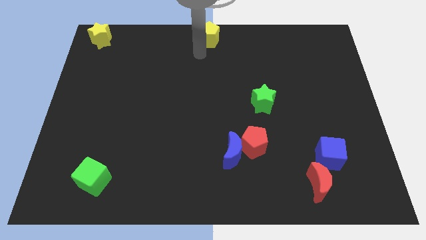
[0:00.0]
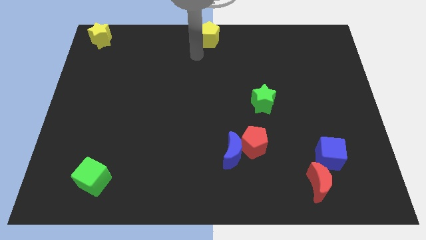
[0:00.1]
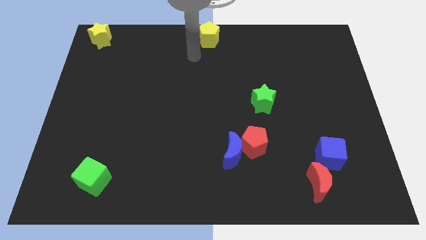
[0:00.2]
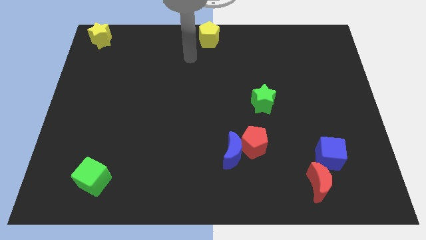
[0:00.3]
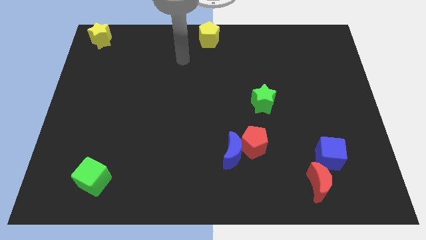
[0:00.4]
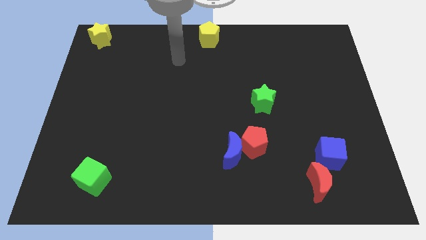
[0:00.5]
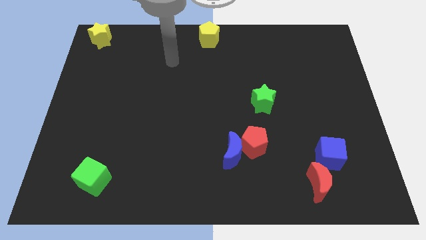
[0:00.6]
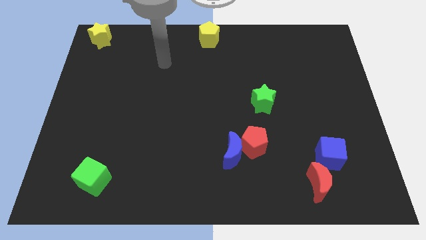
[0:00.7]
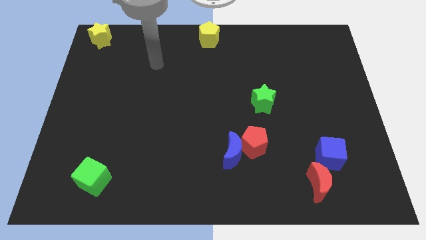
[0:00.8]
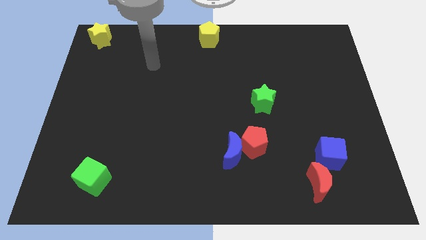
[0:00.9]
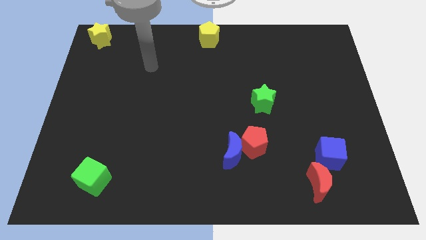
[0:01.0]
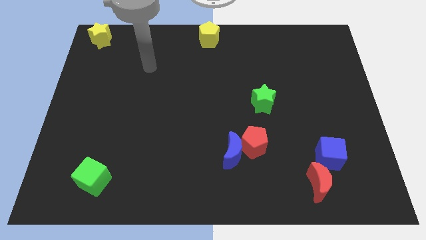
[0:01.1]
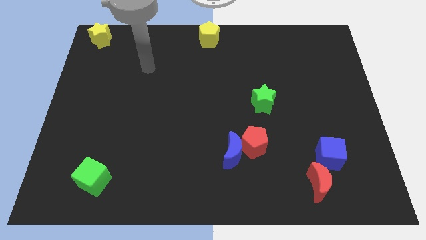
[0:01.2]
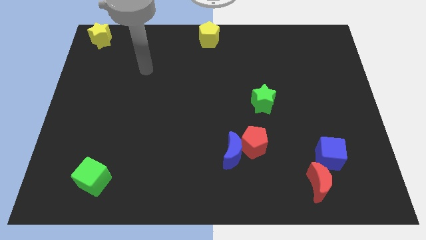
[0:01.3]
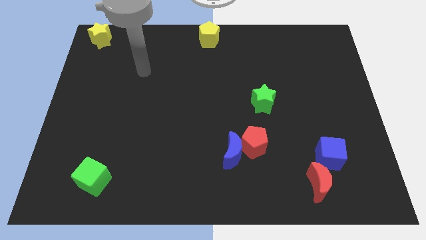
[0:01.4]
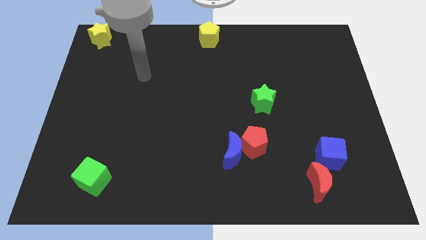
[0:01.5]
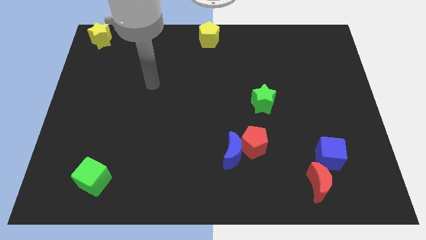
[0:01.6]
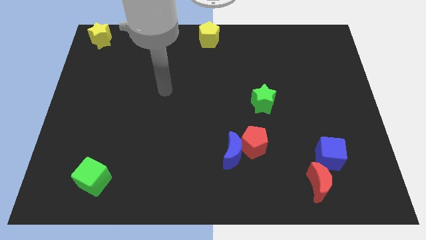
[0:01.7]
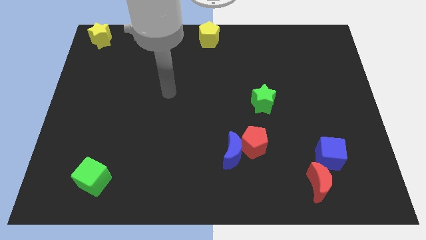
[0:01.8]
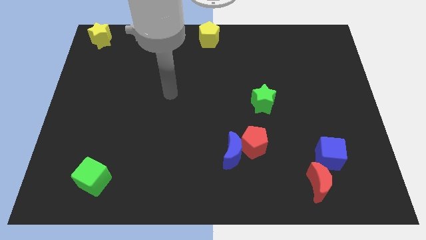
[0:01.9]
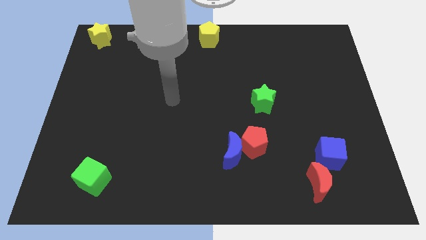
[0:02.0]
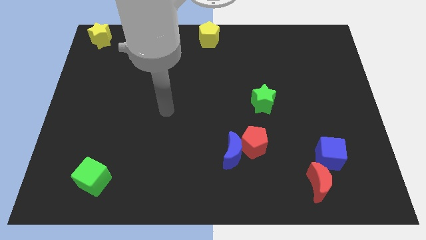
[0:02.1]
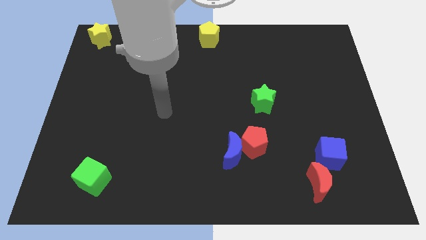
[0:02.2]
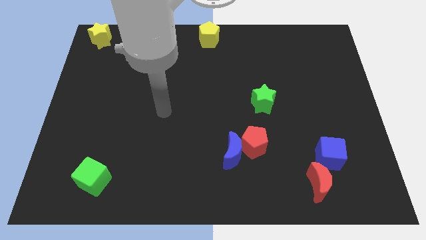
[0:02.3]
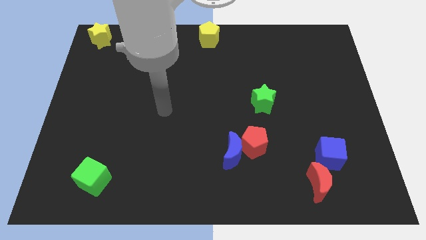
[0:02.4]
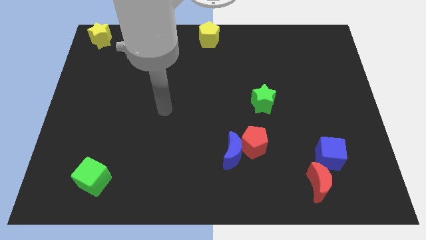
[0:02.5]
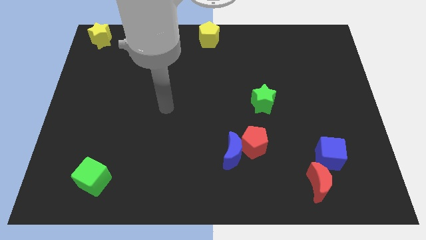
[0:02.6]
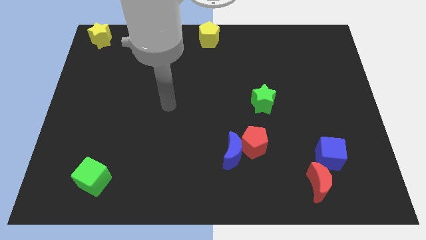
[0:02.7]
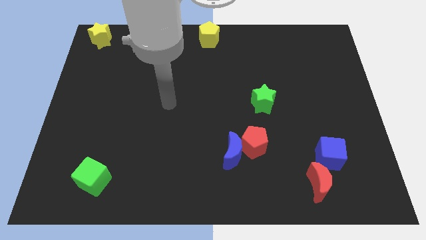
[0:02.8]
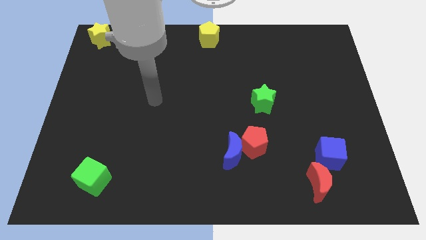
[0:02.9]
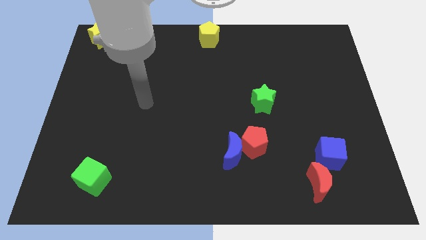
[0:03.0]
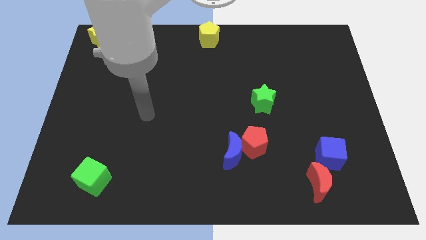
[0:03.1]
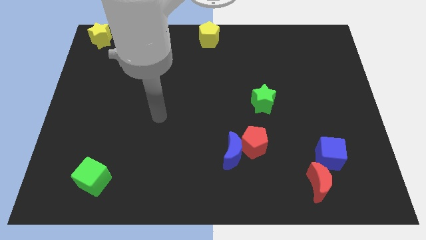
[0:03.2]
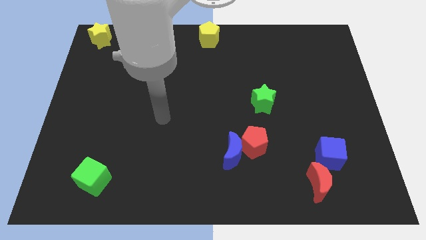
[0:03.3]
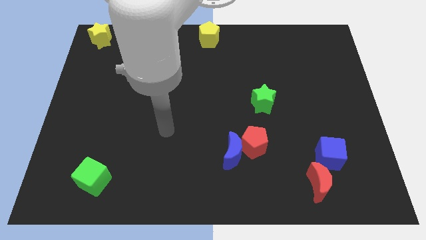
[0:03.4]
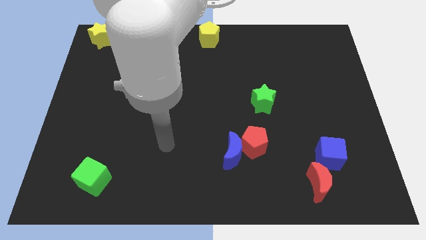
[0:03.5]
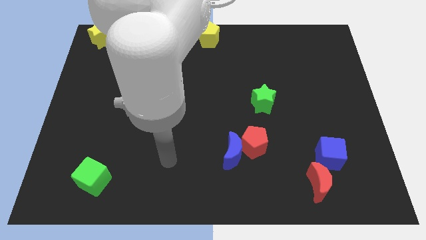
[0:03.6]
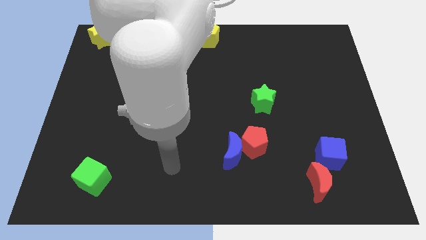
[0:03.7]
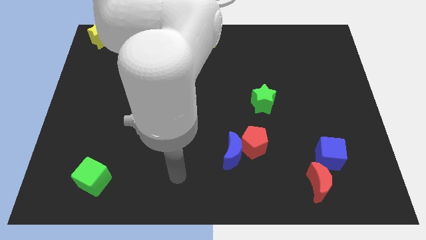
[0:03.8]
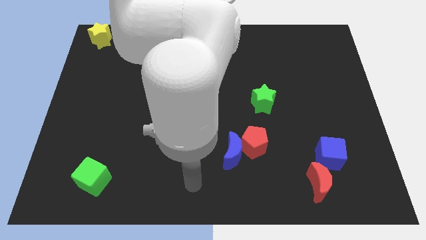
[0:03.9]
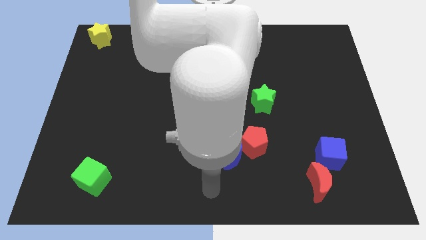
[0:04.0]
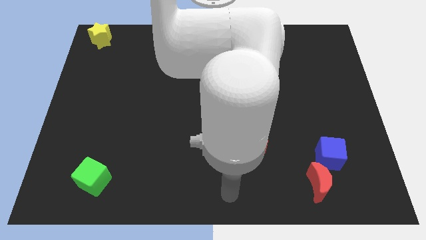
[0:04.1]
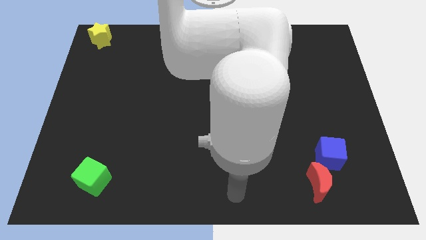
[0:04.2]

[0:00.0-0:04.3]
point your arm at the bottom of the blue crescent

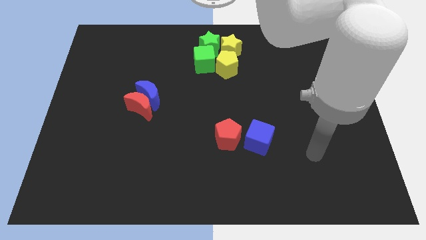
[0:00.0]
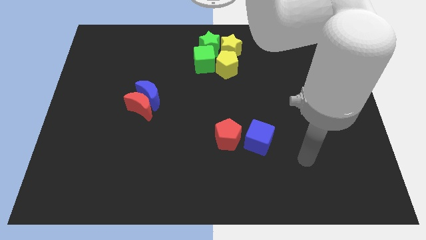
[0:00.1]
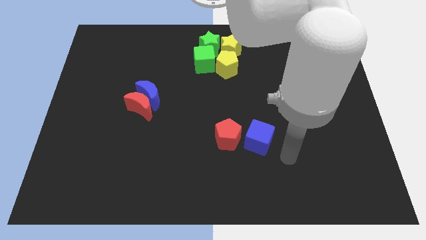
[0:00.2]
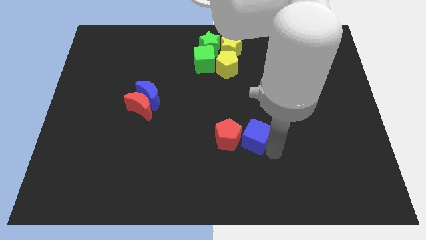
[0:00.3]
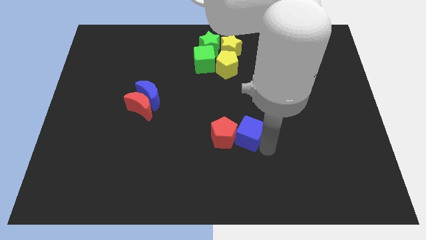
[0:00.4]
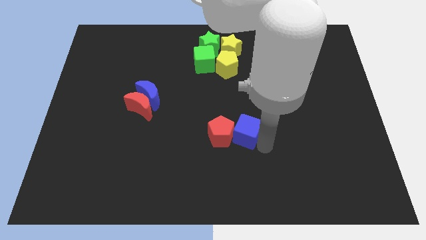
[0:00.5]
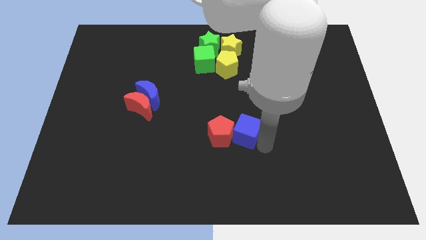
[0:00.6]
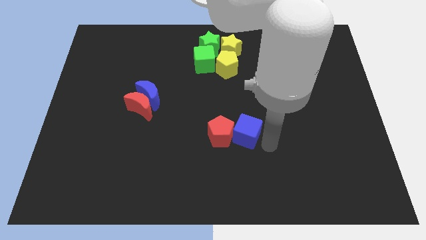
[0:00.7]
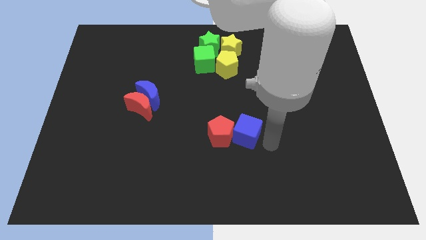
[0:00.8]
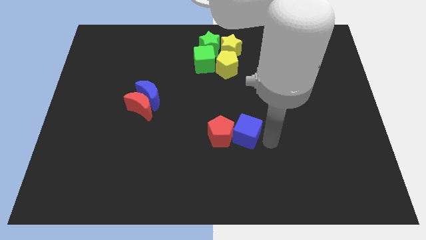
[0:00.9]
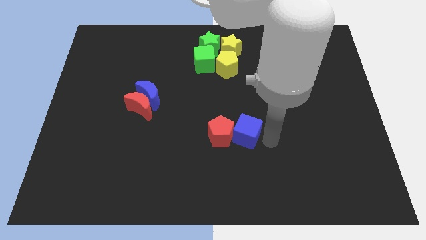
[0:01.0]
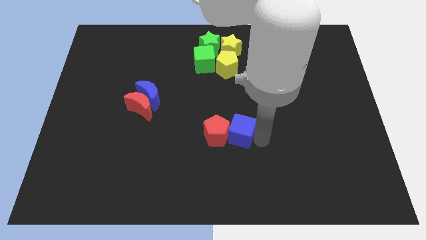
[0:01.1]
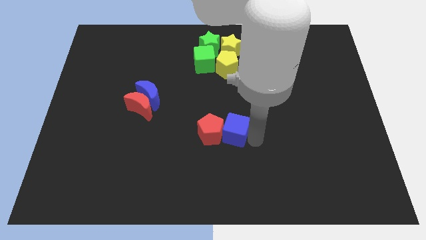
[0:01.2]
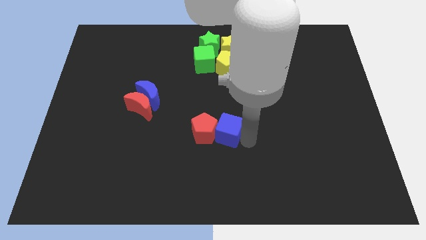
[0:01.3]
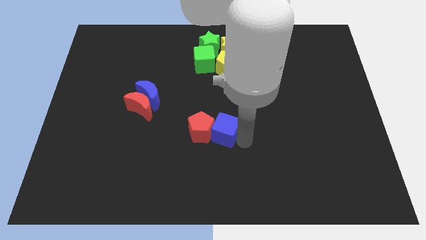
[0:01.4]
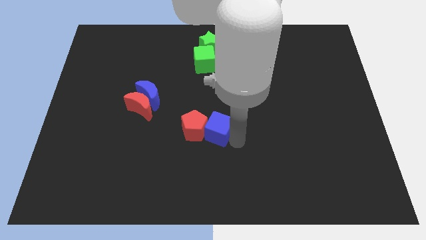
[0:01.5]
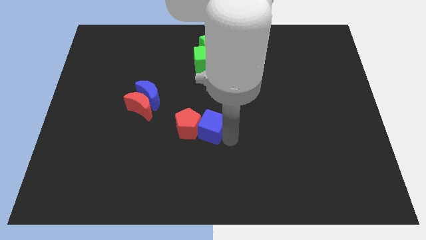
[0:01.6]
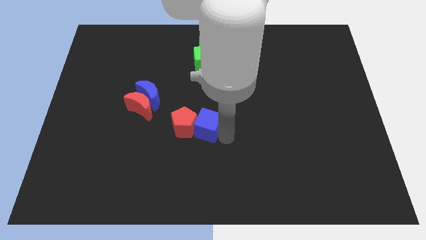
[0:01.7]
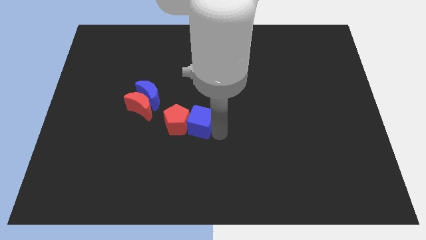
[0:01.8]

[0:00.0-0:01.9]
move the blue cube along with the red pentagon towards the red moon

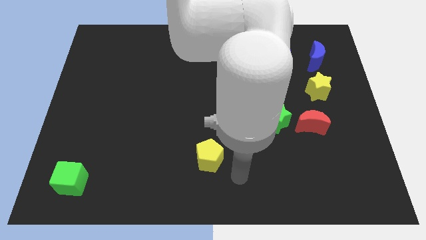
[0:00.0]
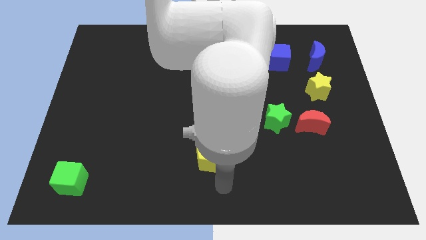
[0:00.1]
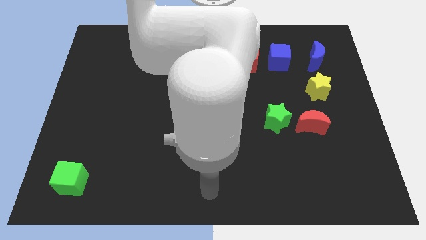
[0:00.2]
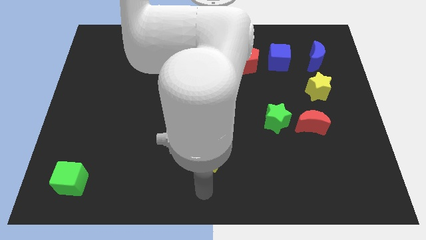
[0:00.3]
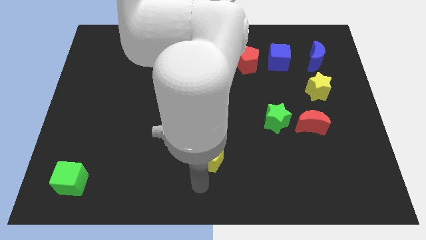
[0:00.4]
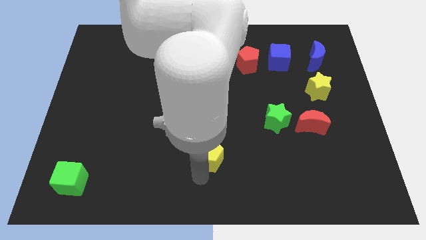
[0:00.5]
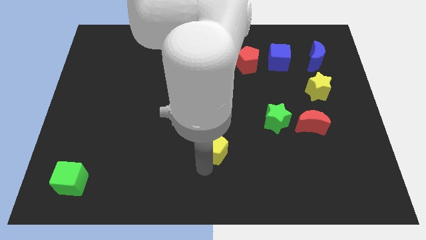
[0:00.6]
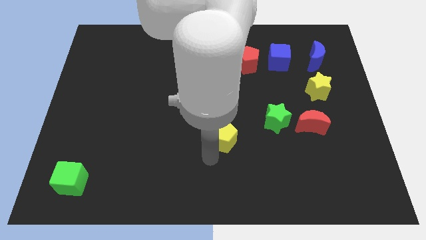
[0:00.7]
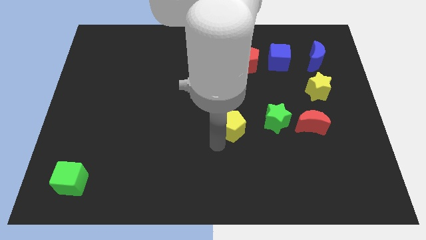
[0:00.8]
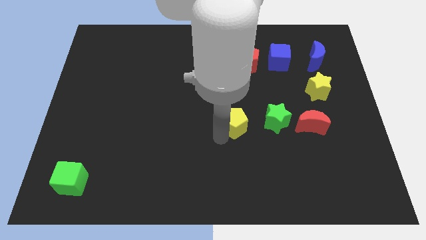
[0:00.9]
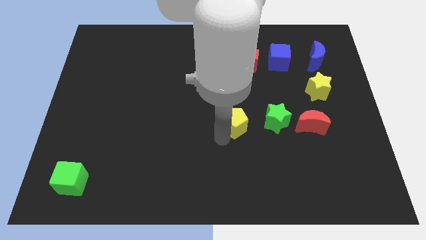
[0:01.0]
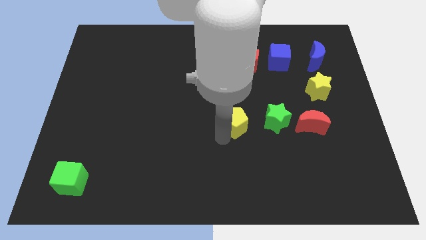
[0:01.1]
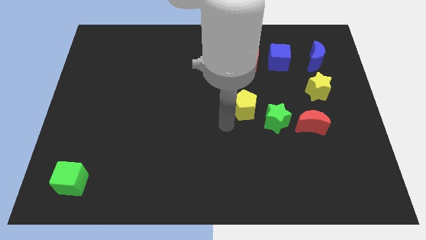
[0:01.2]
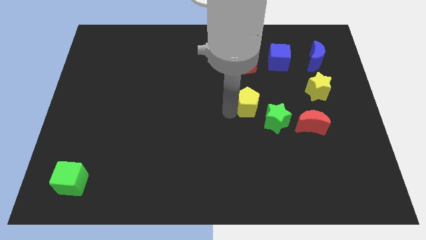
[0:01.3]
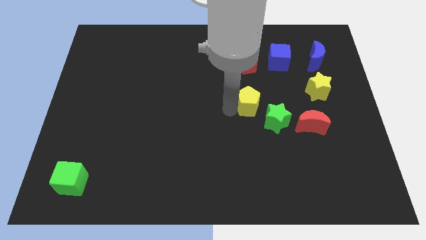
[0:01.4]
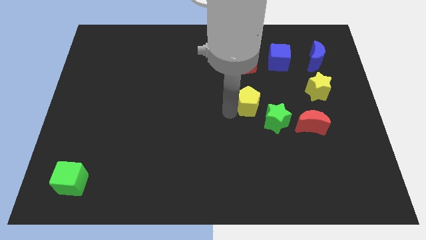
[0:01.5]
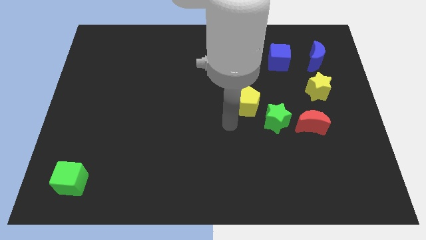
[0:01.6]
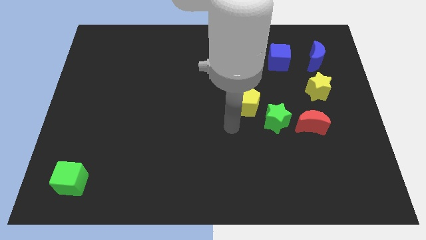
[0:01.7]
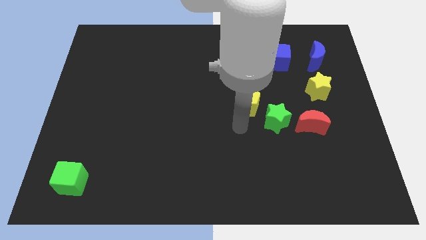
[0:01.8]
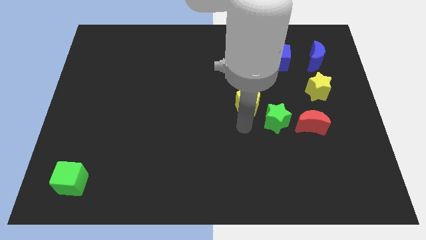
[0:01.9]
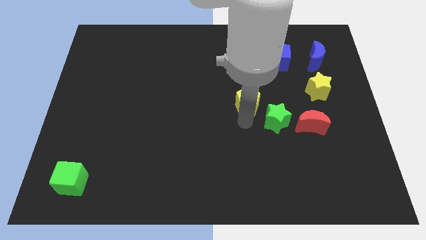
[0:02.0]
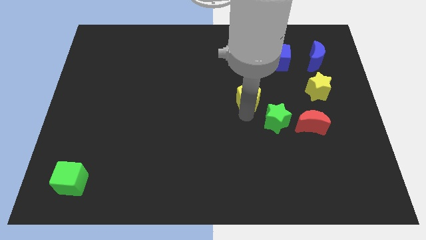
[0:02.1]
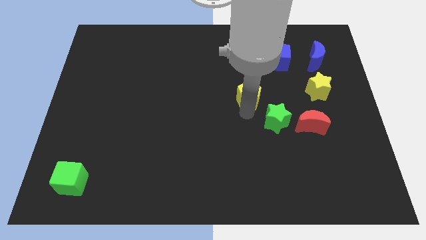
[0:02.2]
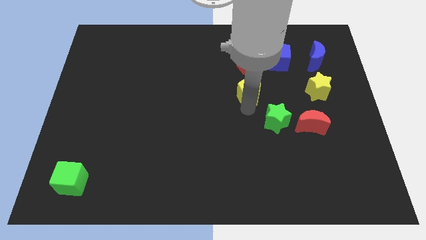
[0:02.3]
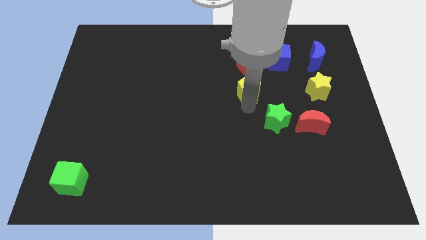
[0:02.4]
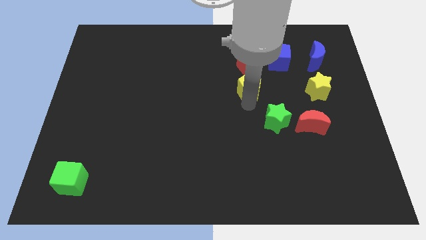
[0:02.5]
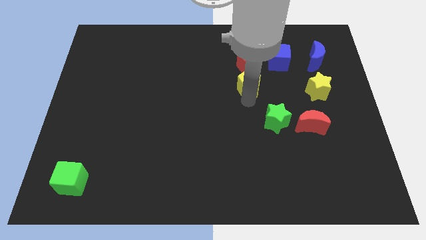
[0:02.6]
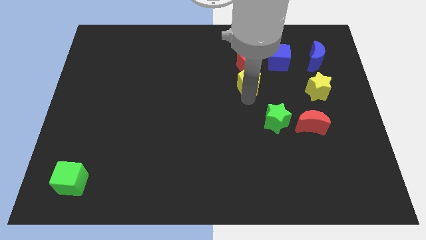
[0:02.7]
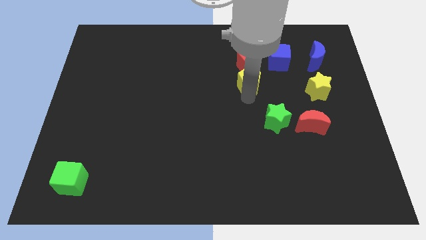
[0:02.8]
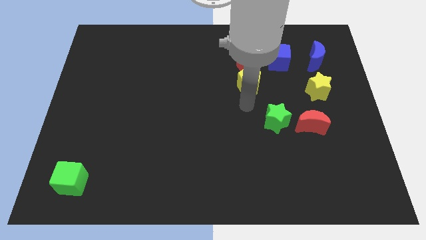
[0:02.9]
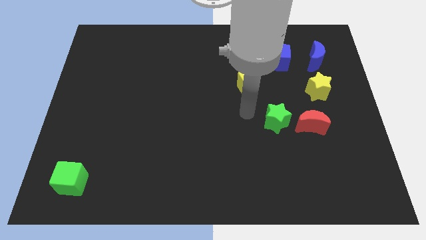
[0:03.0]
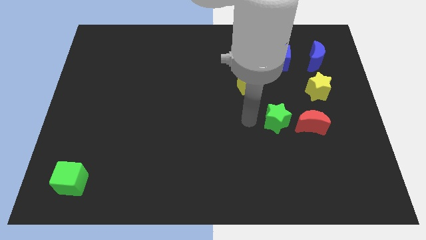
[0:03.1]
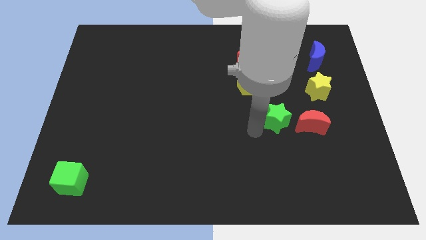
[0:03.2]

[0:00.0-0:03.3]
move the star towards the red crescent
